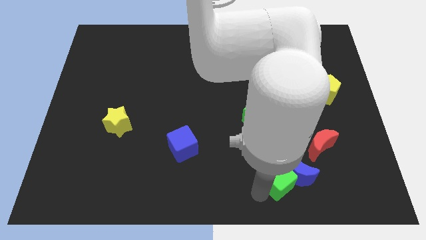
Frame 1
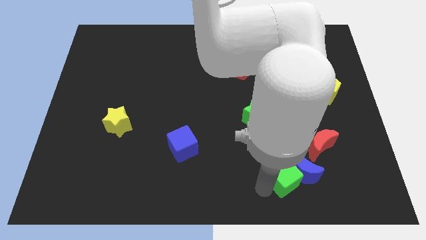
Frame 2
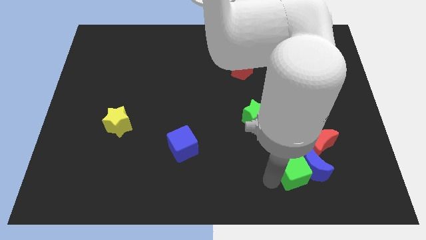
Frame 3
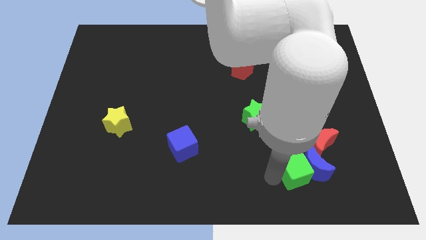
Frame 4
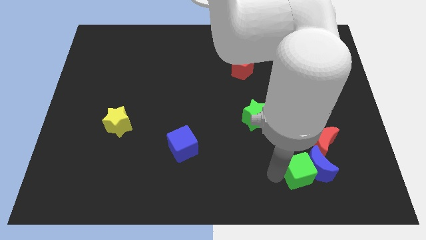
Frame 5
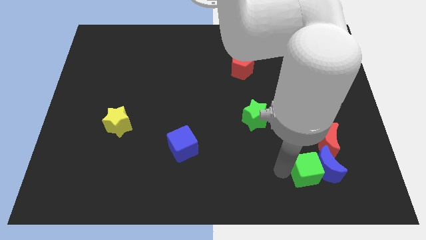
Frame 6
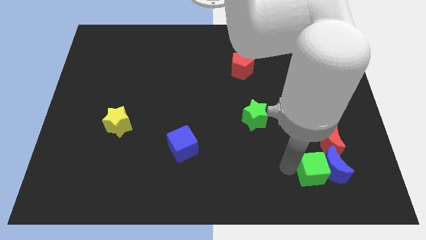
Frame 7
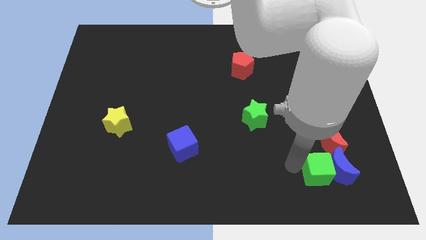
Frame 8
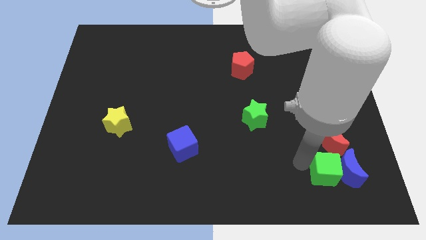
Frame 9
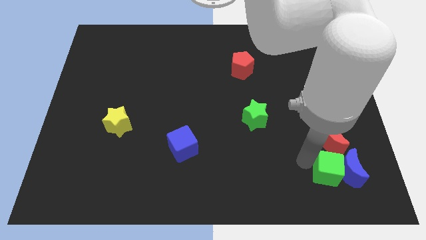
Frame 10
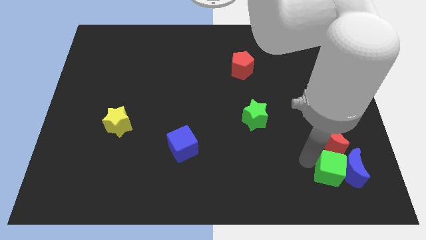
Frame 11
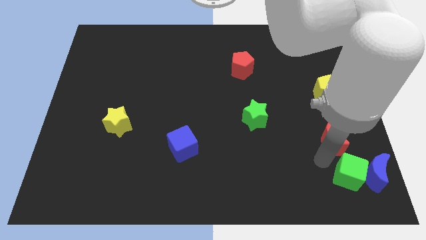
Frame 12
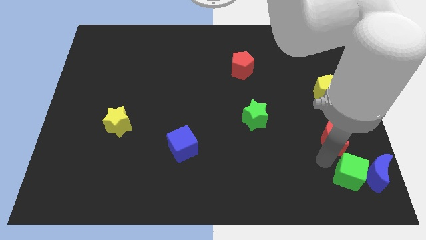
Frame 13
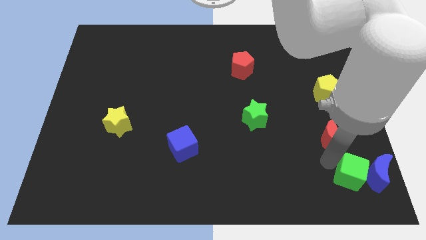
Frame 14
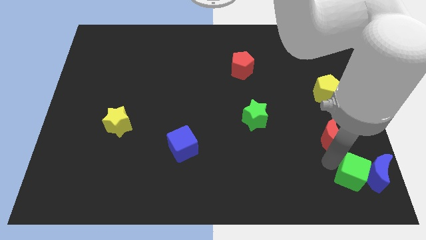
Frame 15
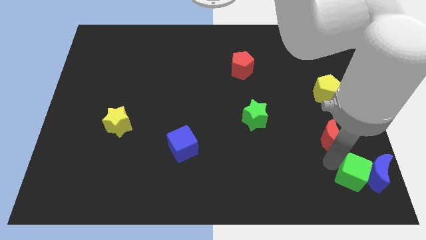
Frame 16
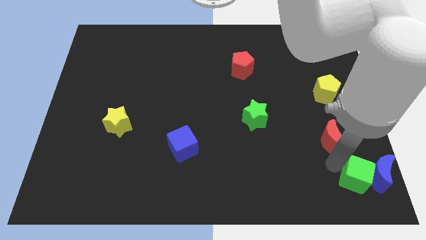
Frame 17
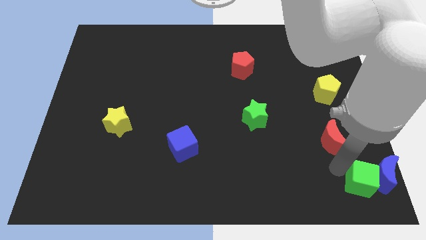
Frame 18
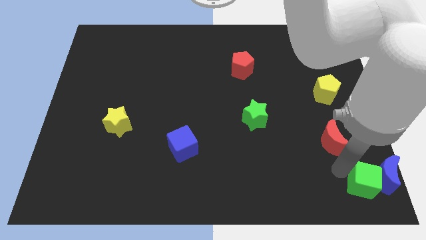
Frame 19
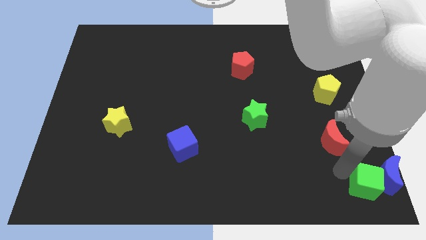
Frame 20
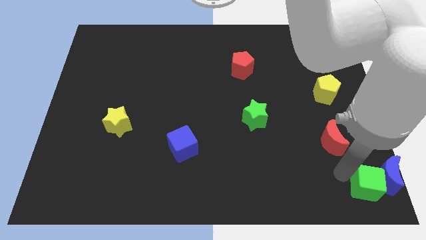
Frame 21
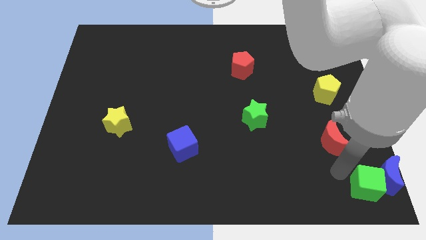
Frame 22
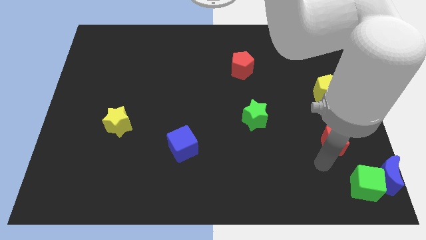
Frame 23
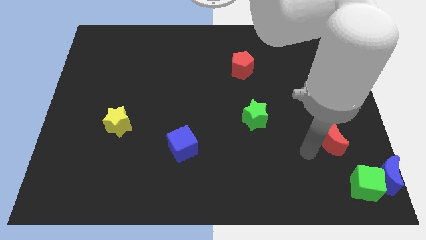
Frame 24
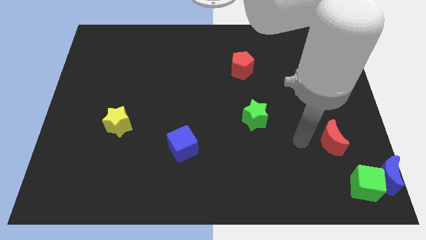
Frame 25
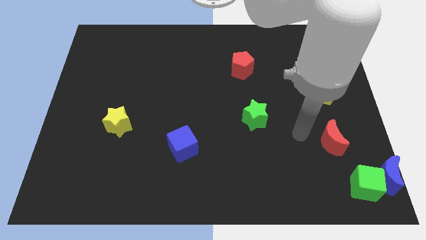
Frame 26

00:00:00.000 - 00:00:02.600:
push the green cube and blue moon to the right side of the board

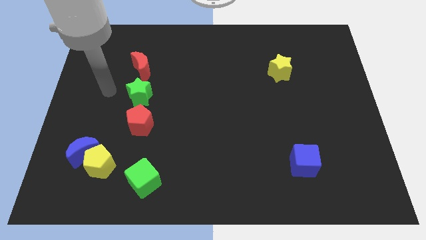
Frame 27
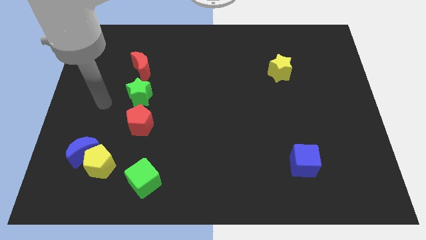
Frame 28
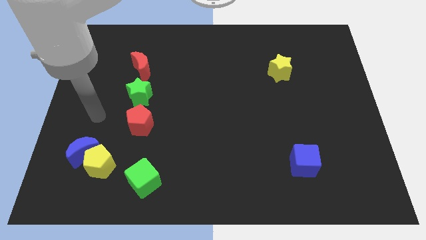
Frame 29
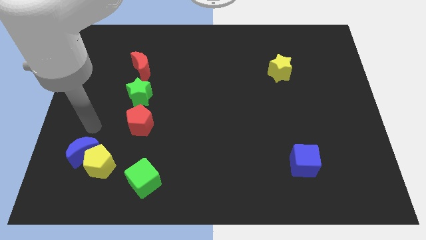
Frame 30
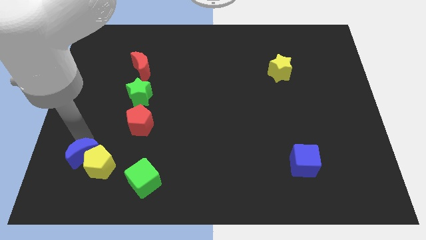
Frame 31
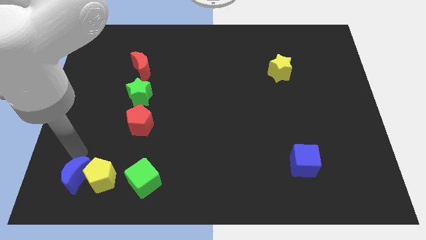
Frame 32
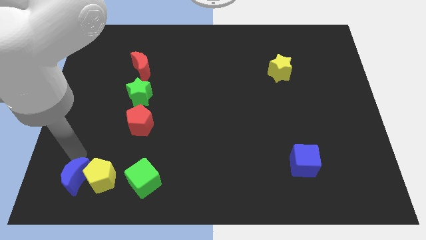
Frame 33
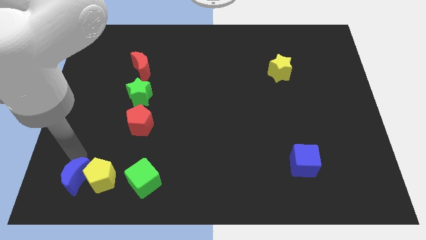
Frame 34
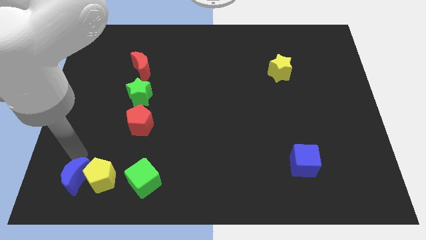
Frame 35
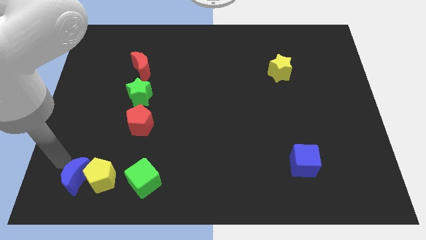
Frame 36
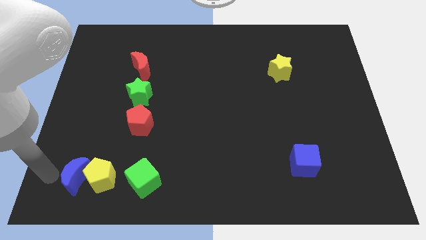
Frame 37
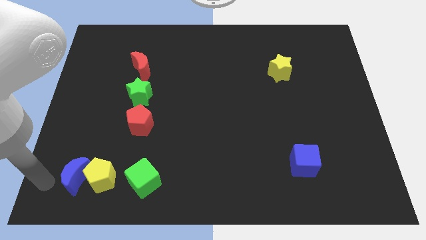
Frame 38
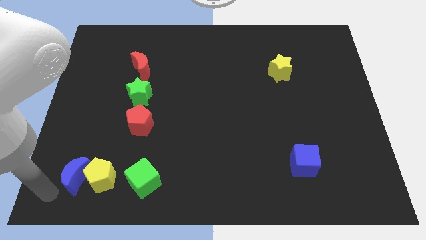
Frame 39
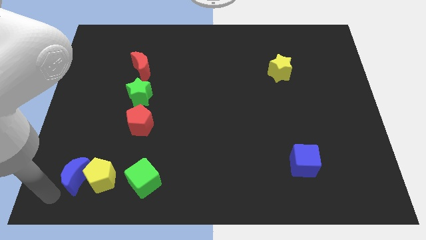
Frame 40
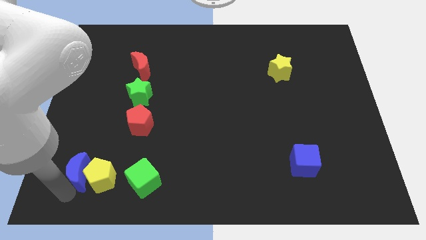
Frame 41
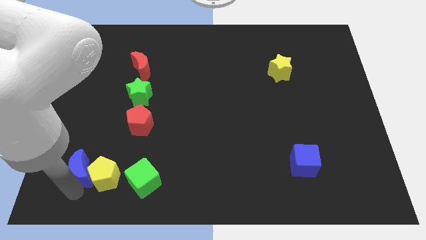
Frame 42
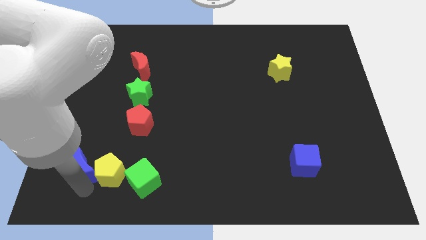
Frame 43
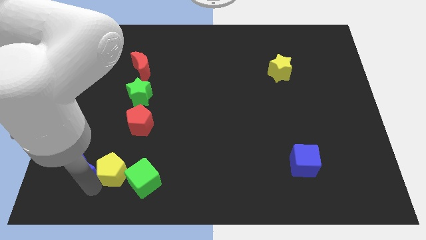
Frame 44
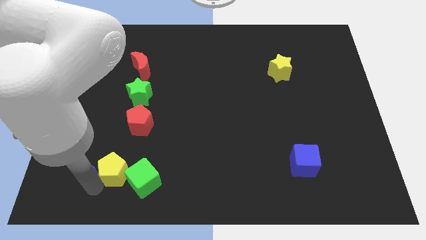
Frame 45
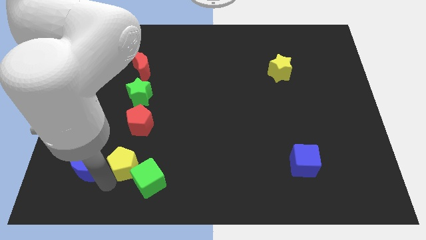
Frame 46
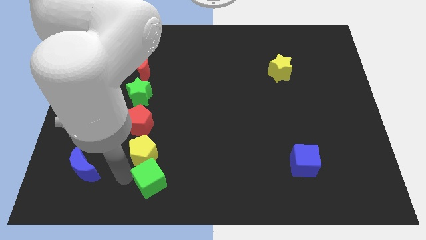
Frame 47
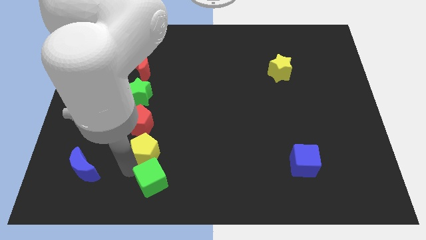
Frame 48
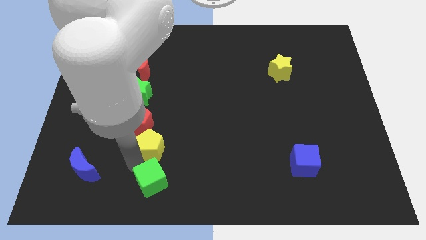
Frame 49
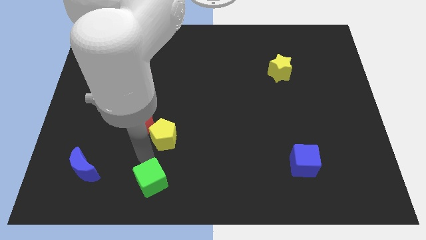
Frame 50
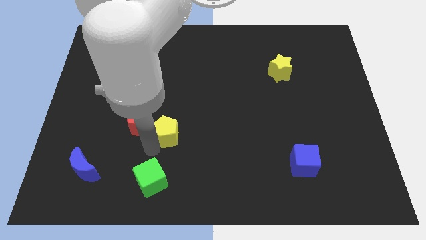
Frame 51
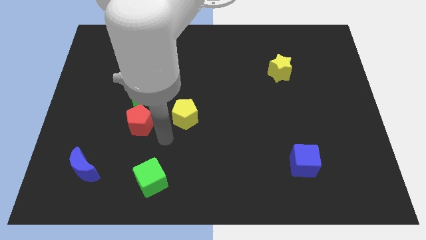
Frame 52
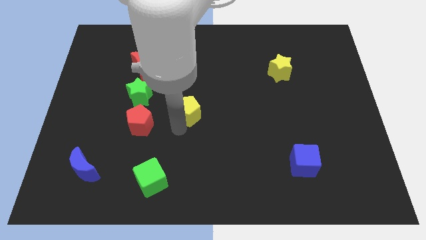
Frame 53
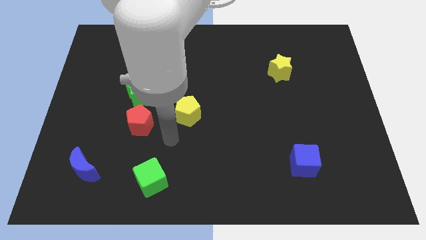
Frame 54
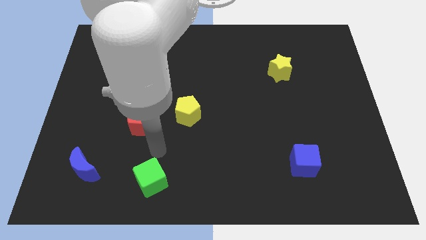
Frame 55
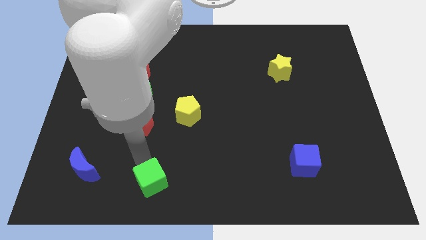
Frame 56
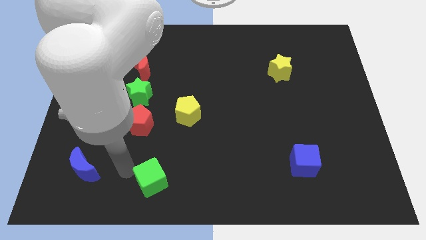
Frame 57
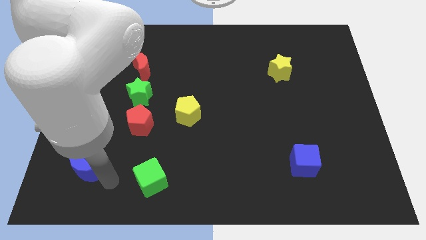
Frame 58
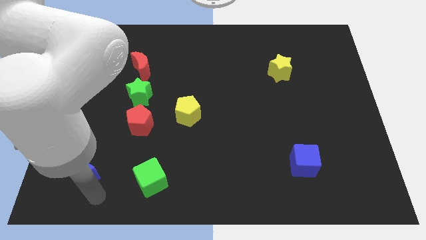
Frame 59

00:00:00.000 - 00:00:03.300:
separate the blue crescent and the yellow pentagon

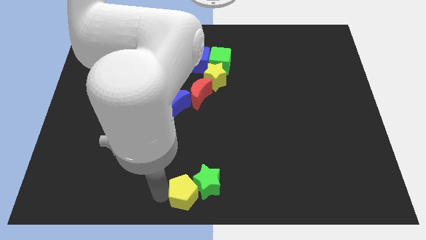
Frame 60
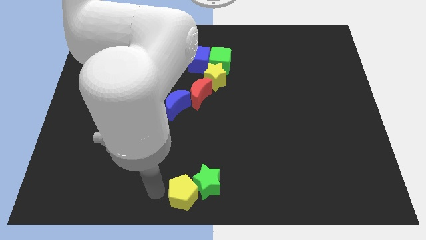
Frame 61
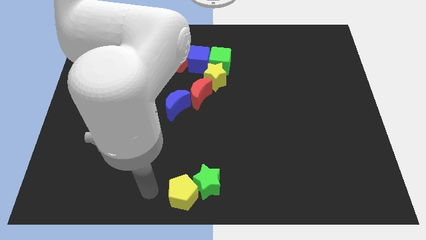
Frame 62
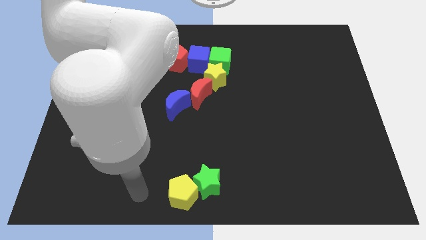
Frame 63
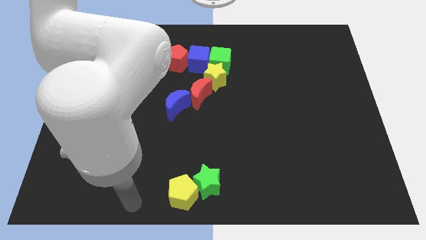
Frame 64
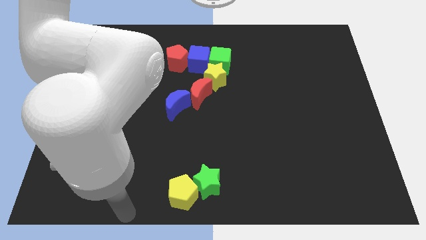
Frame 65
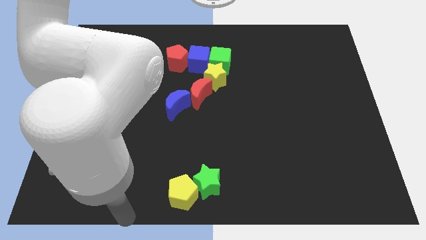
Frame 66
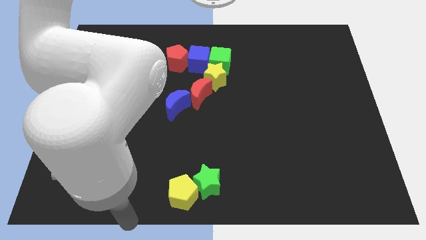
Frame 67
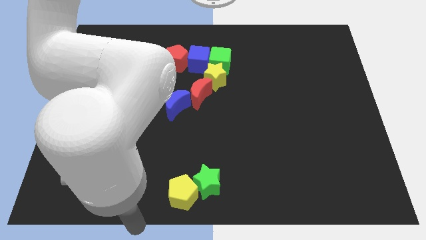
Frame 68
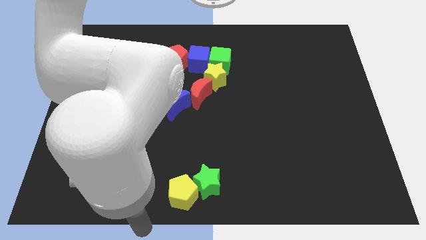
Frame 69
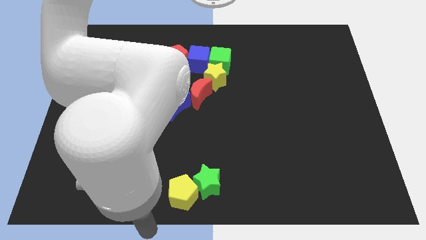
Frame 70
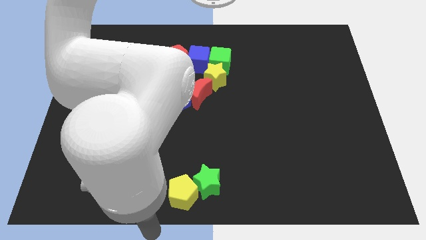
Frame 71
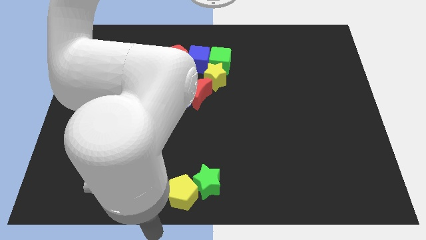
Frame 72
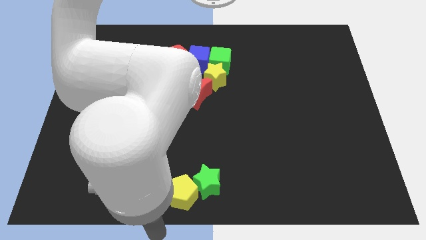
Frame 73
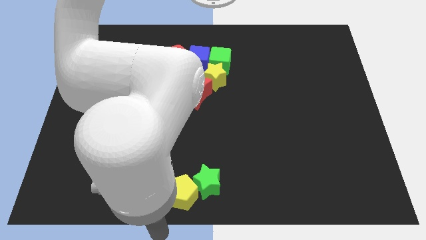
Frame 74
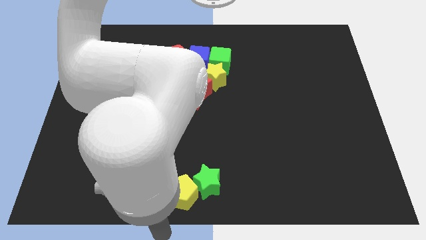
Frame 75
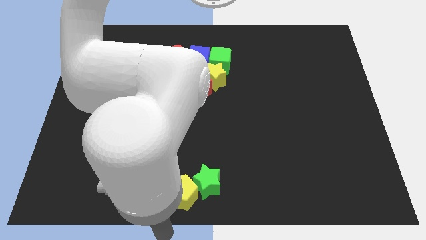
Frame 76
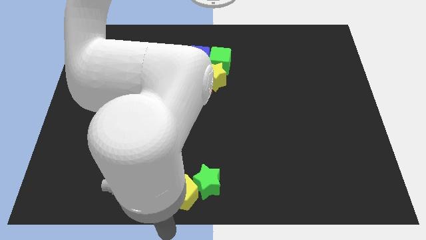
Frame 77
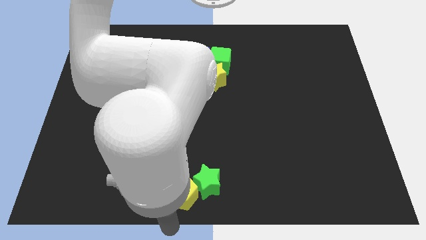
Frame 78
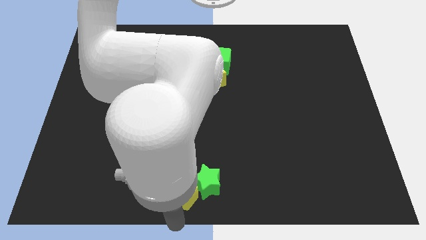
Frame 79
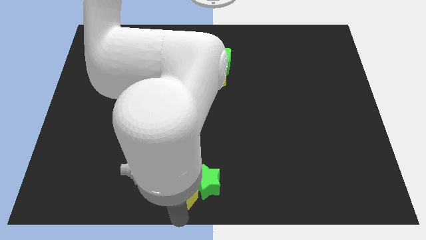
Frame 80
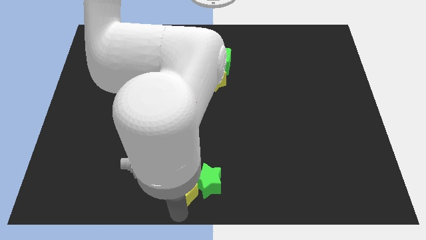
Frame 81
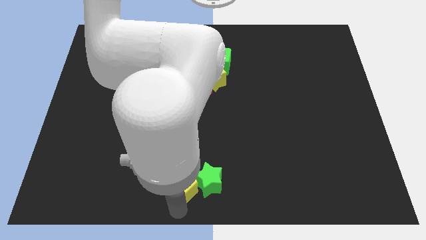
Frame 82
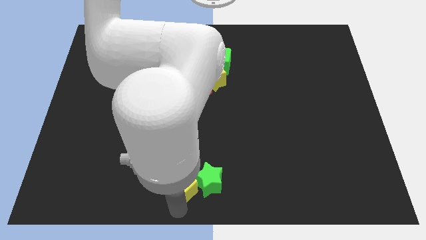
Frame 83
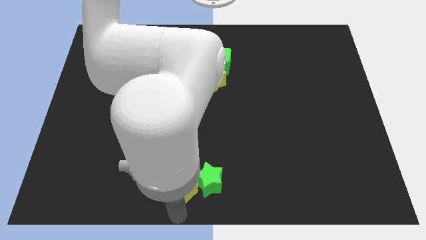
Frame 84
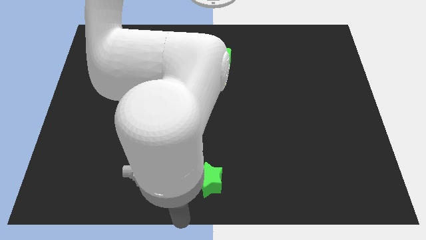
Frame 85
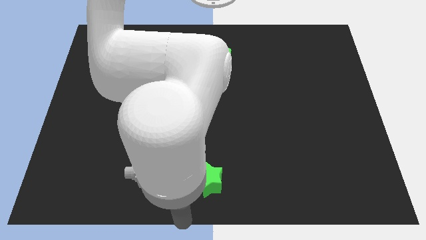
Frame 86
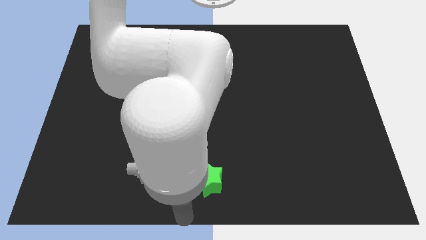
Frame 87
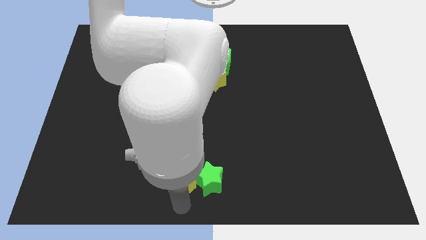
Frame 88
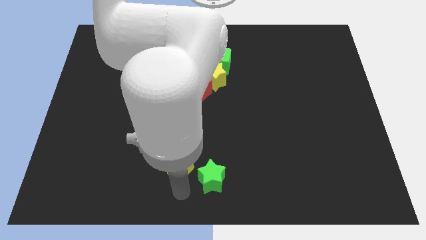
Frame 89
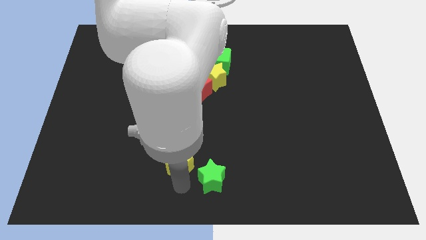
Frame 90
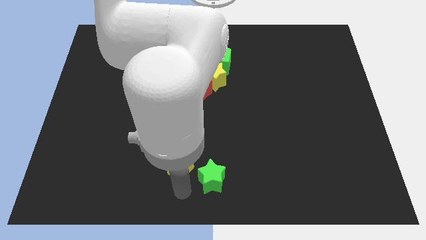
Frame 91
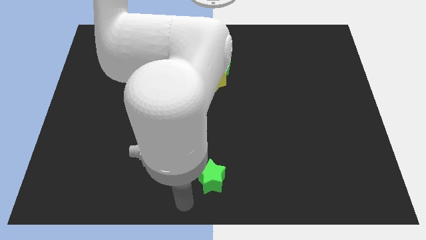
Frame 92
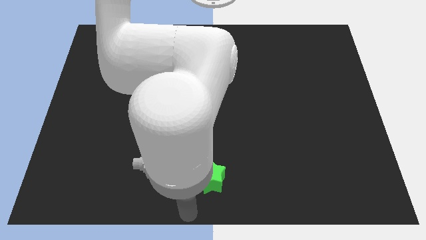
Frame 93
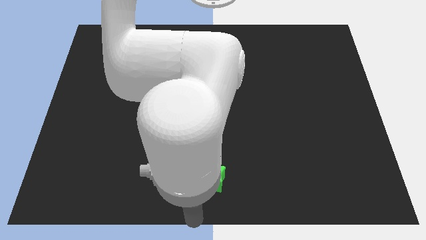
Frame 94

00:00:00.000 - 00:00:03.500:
separate the green star and yellow pentagon
